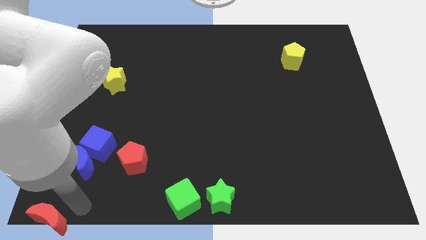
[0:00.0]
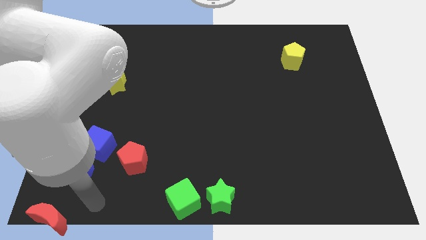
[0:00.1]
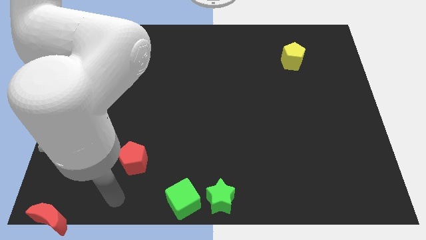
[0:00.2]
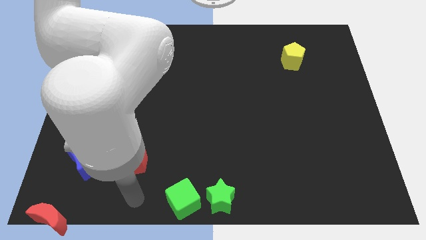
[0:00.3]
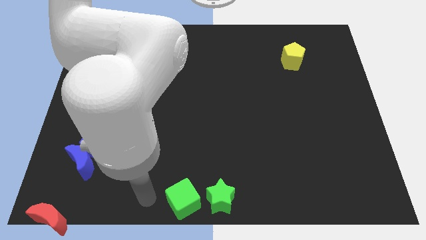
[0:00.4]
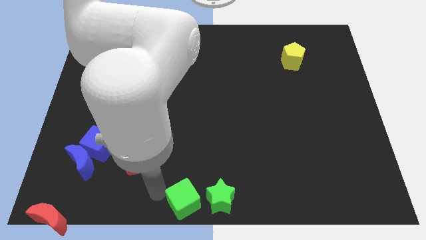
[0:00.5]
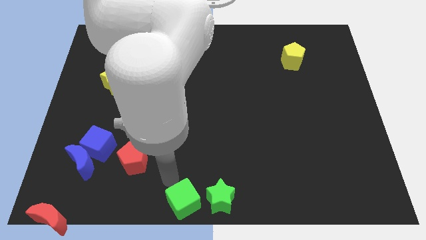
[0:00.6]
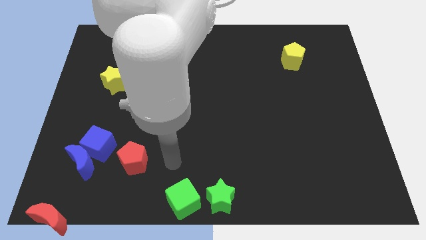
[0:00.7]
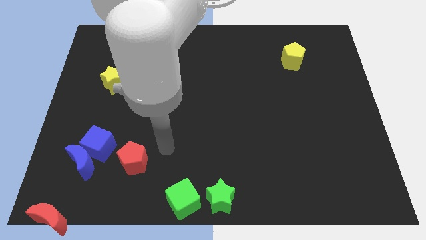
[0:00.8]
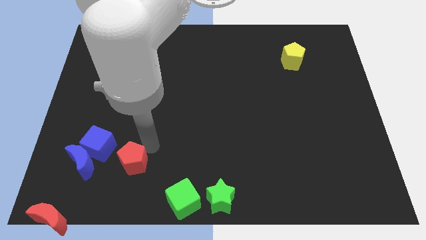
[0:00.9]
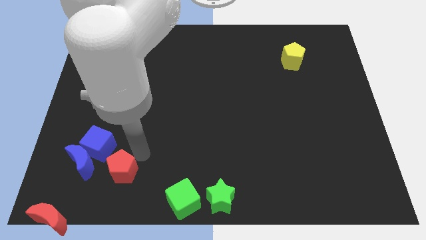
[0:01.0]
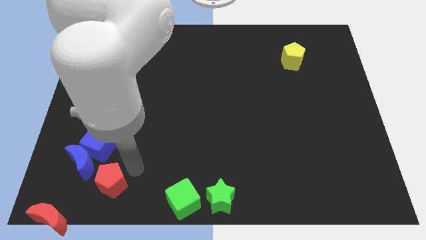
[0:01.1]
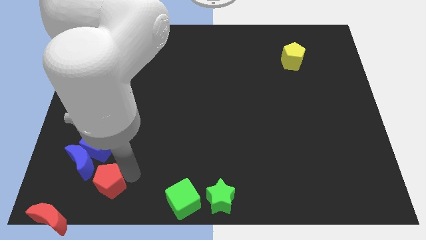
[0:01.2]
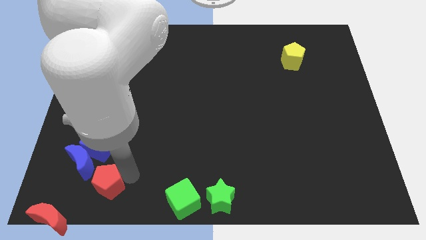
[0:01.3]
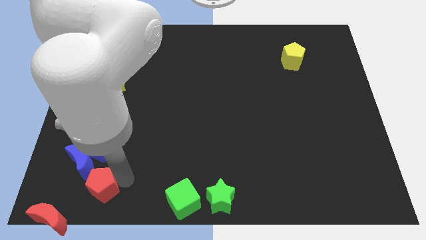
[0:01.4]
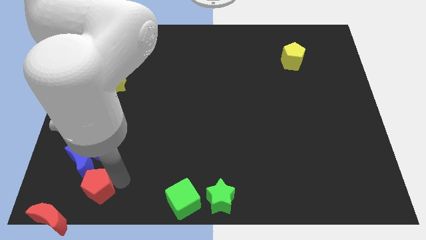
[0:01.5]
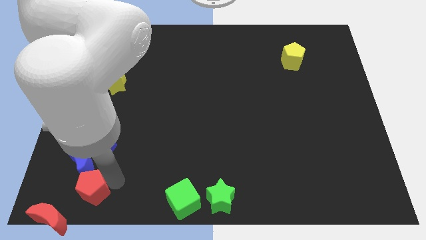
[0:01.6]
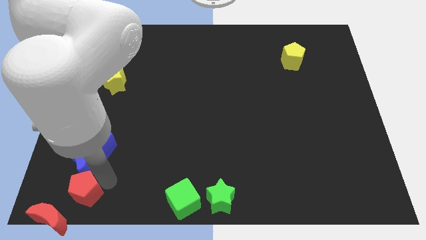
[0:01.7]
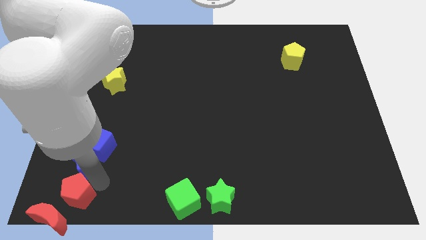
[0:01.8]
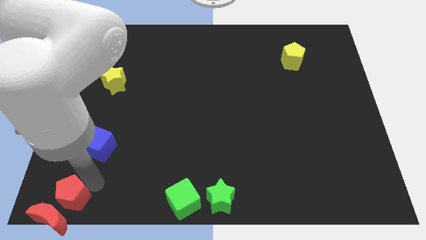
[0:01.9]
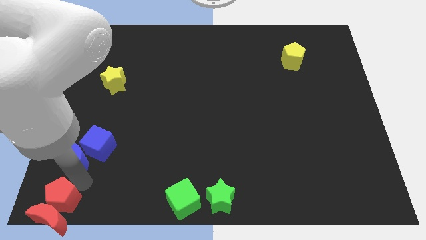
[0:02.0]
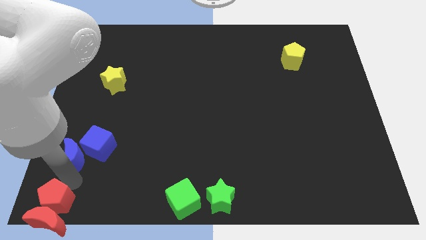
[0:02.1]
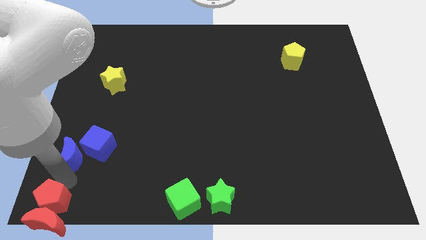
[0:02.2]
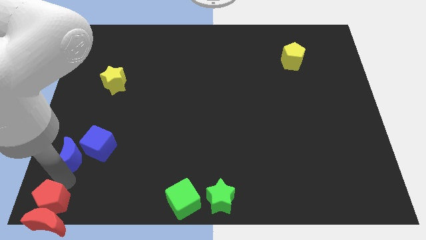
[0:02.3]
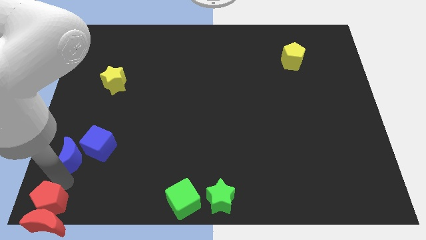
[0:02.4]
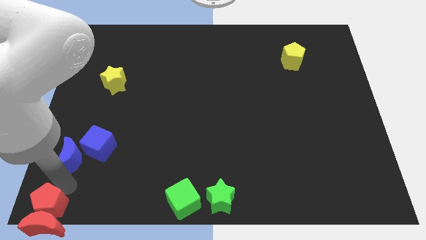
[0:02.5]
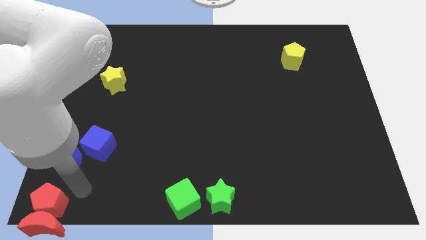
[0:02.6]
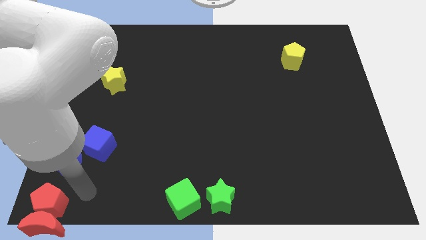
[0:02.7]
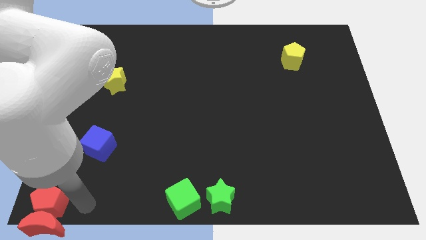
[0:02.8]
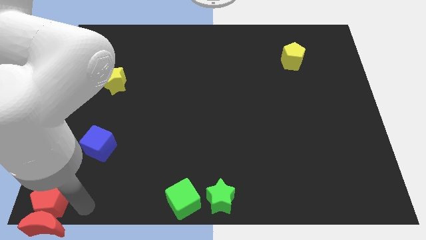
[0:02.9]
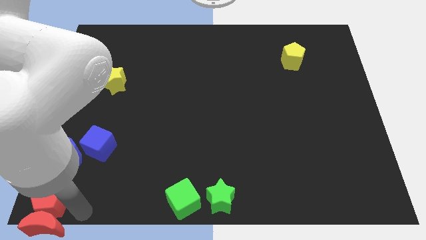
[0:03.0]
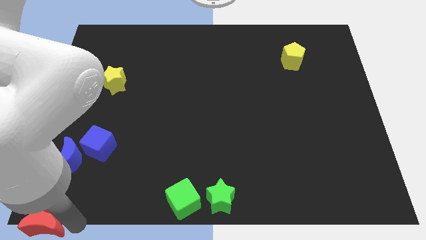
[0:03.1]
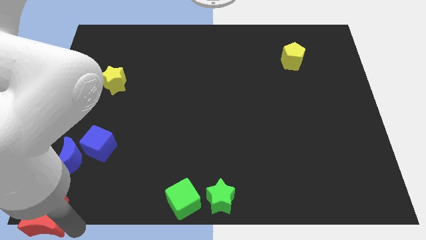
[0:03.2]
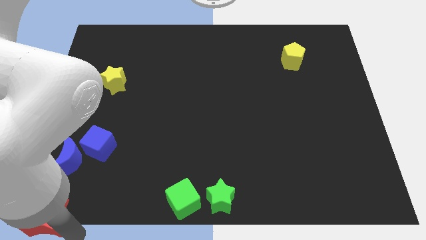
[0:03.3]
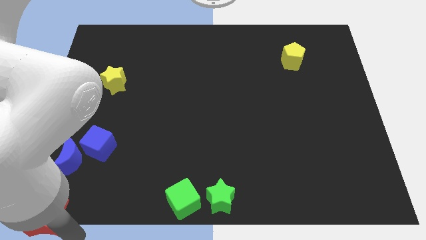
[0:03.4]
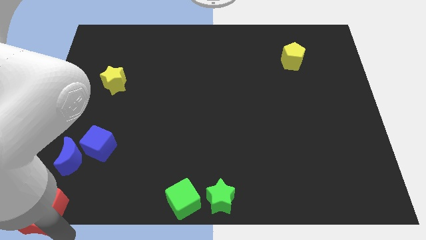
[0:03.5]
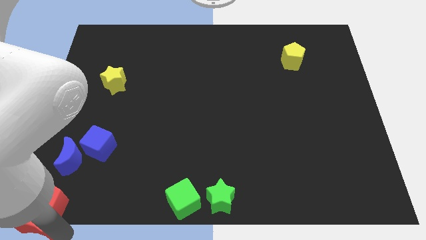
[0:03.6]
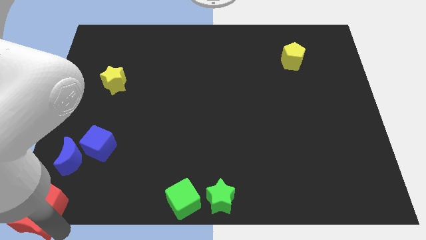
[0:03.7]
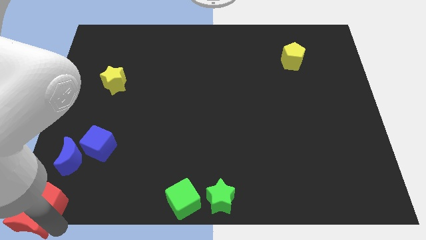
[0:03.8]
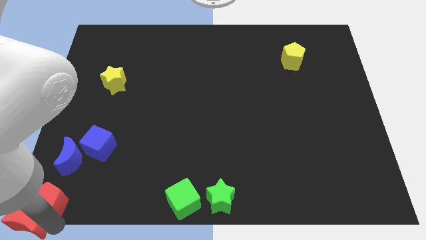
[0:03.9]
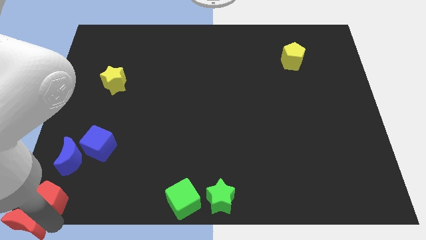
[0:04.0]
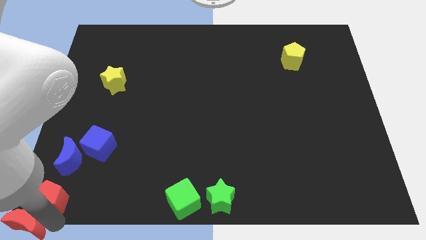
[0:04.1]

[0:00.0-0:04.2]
place the red blocks to bottom left of the board

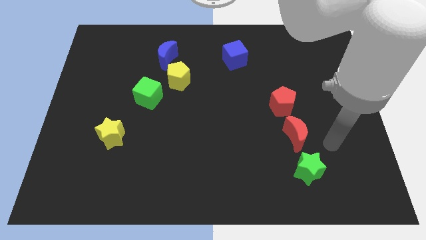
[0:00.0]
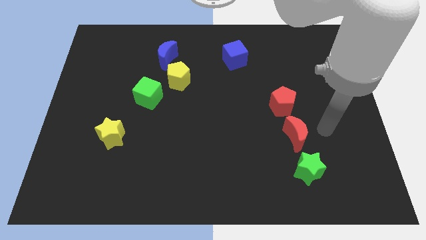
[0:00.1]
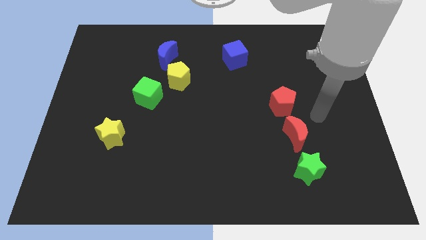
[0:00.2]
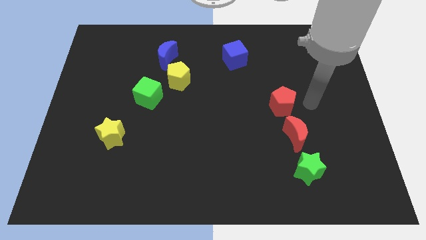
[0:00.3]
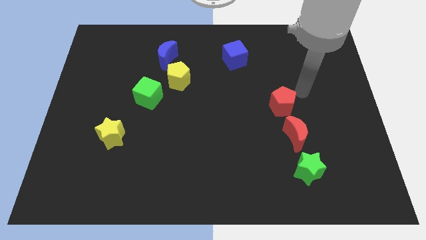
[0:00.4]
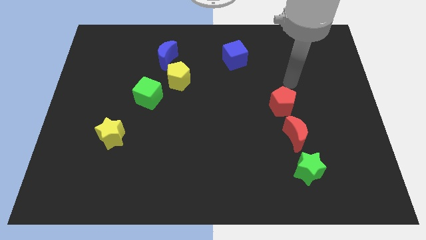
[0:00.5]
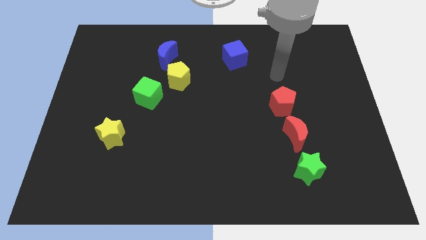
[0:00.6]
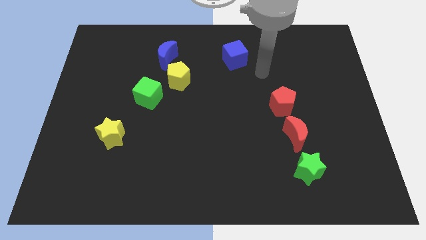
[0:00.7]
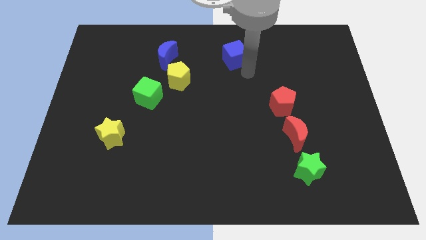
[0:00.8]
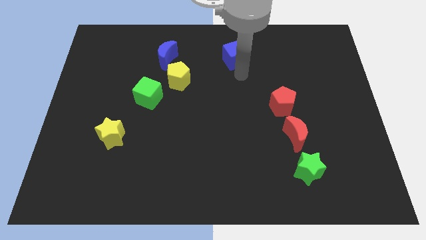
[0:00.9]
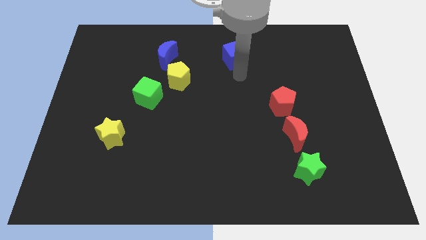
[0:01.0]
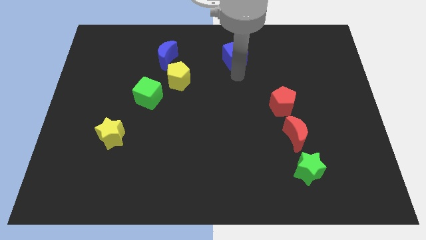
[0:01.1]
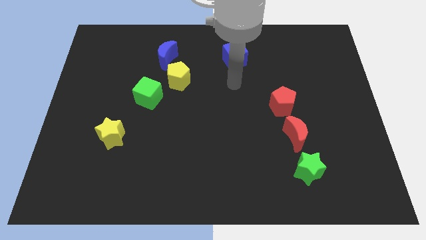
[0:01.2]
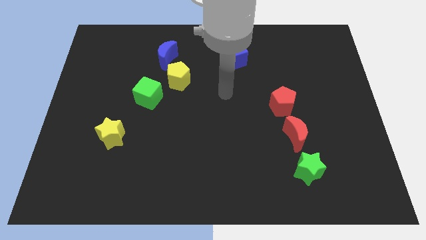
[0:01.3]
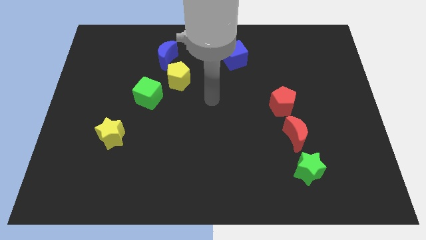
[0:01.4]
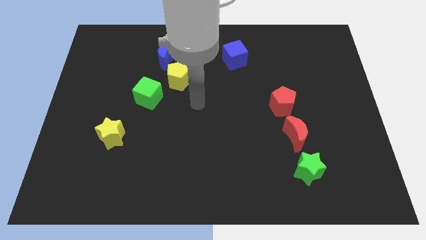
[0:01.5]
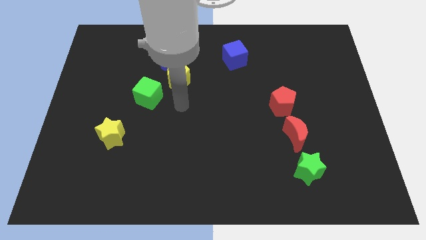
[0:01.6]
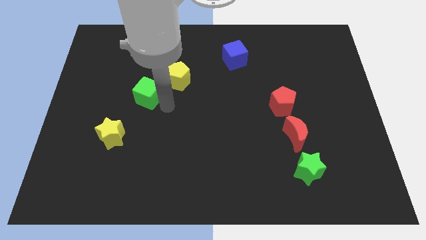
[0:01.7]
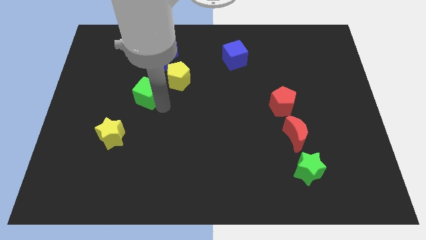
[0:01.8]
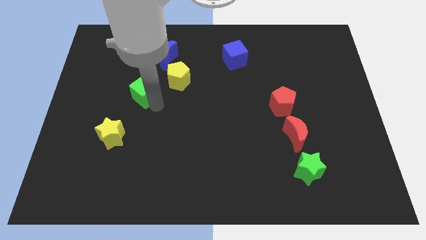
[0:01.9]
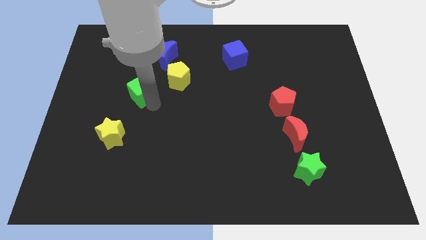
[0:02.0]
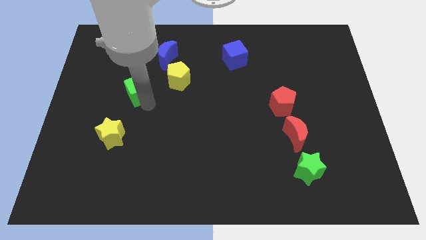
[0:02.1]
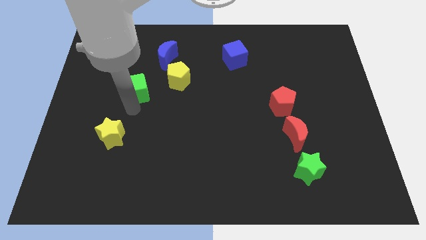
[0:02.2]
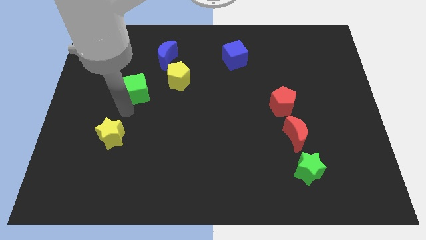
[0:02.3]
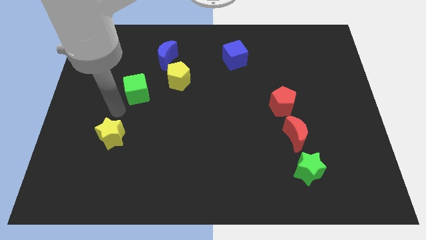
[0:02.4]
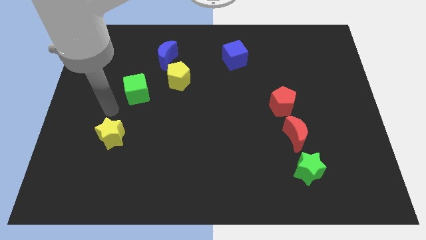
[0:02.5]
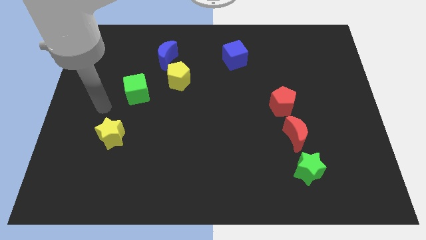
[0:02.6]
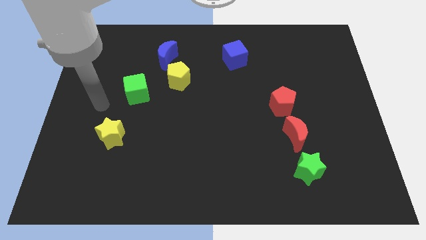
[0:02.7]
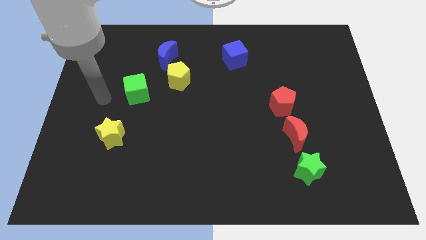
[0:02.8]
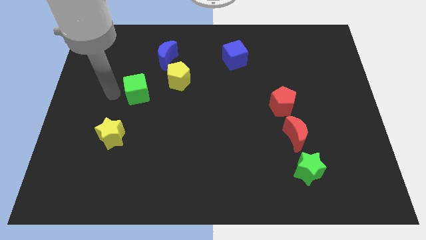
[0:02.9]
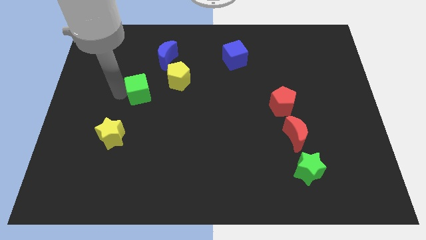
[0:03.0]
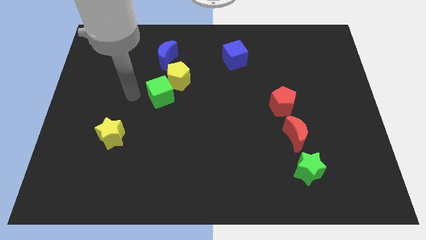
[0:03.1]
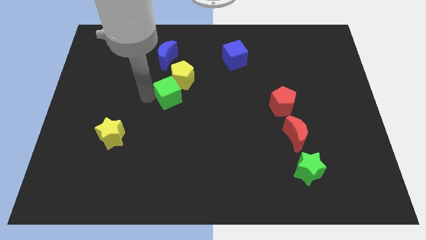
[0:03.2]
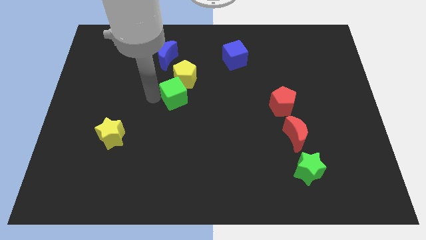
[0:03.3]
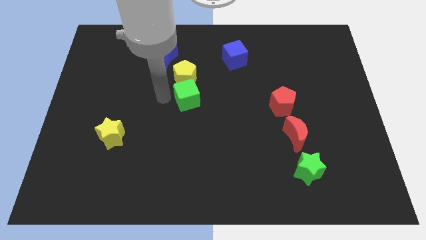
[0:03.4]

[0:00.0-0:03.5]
place the green cube vertically below the yellow pentagon

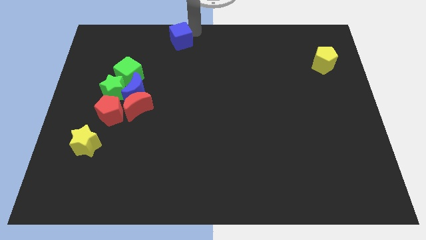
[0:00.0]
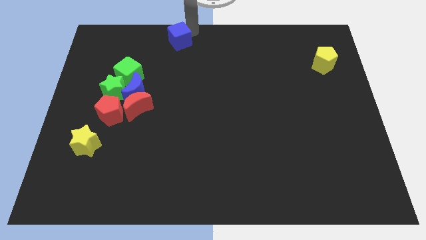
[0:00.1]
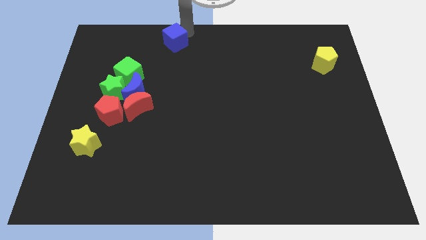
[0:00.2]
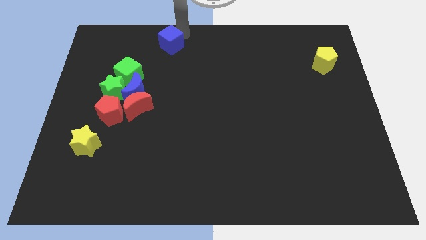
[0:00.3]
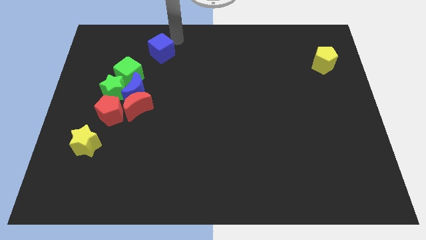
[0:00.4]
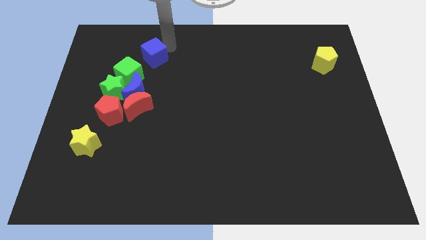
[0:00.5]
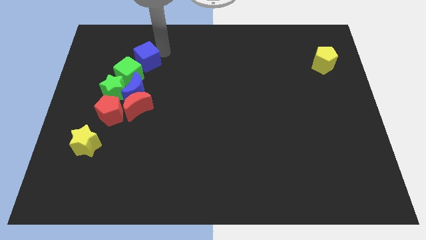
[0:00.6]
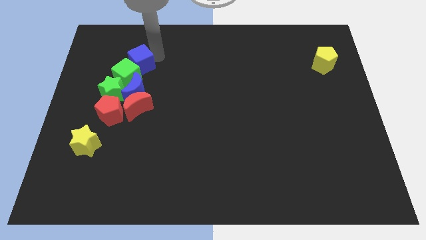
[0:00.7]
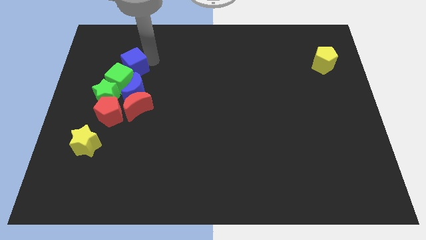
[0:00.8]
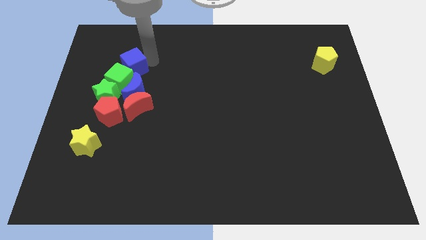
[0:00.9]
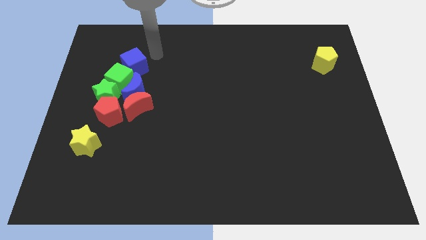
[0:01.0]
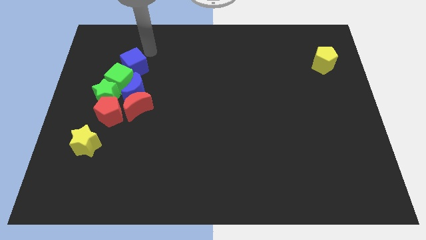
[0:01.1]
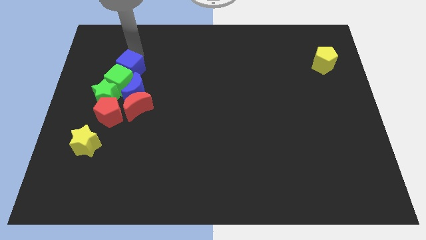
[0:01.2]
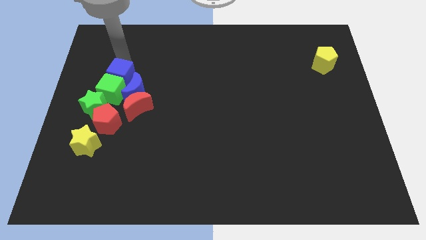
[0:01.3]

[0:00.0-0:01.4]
move the blue cube into the green cube

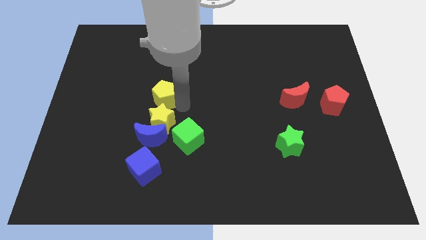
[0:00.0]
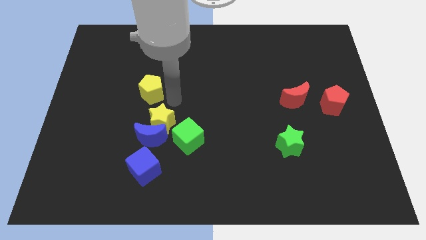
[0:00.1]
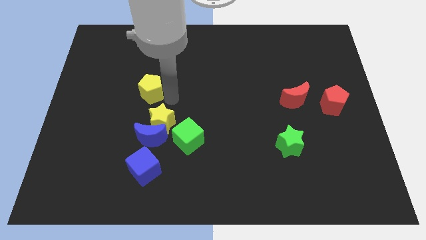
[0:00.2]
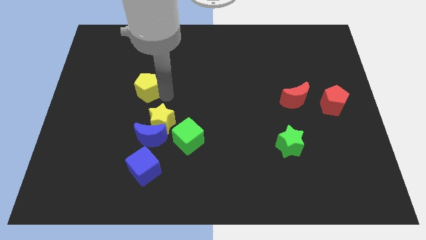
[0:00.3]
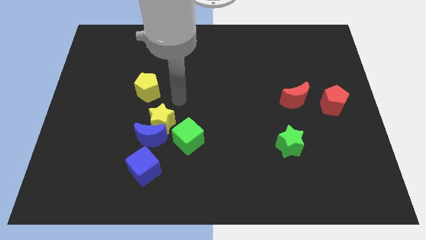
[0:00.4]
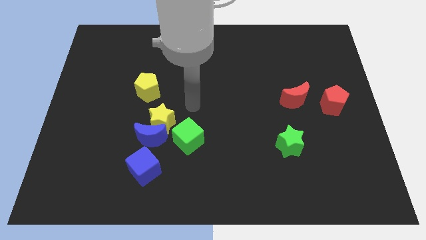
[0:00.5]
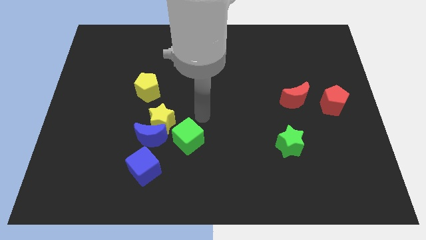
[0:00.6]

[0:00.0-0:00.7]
push the yellow pentagon slightly to the left
